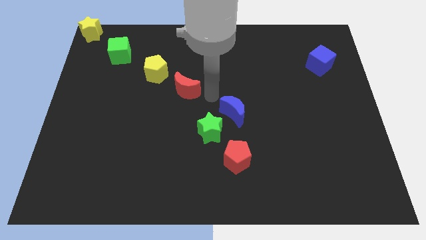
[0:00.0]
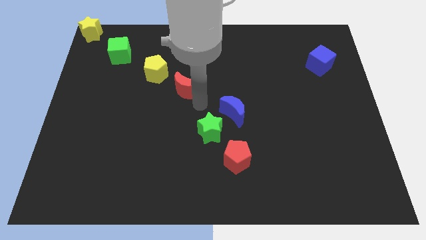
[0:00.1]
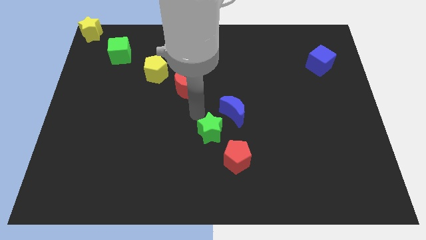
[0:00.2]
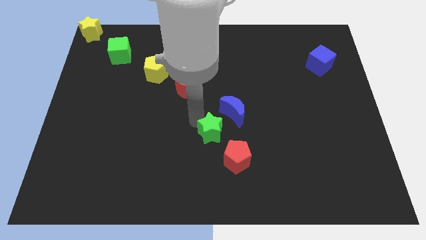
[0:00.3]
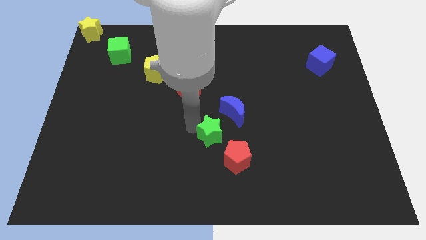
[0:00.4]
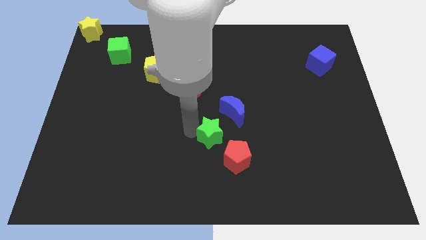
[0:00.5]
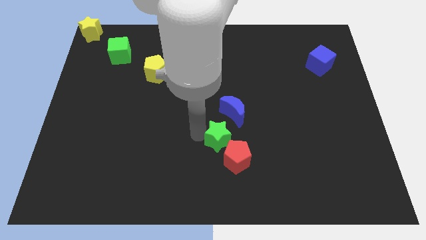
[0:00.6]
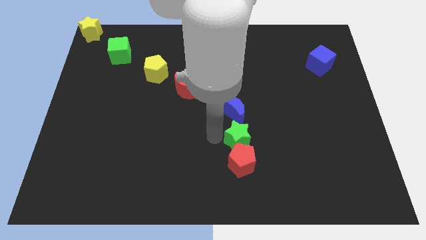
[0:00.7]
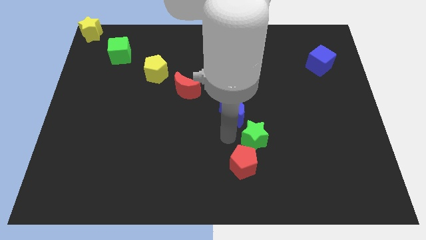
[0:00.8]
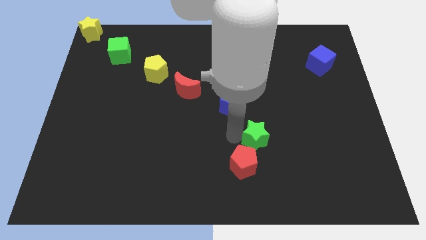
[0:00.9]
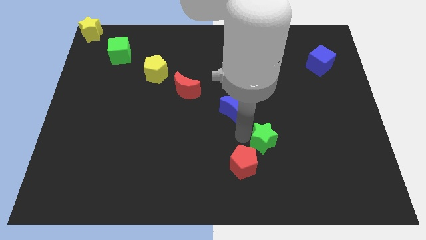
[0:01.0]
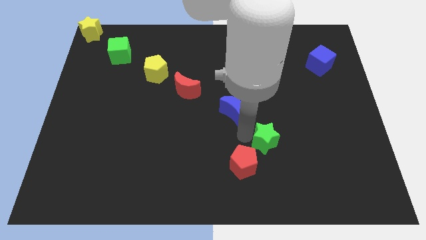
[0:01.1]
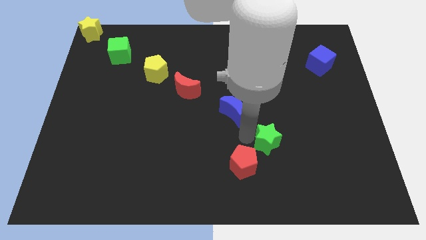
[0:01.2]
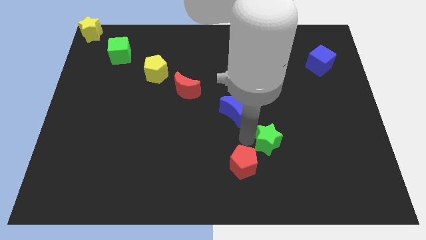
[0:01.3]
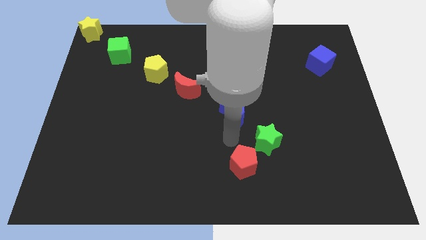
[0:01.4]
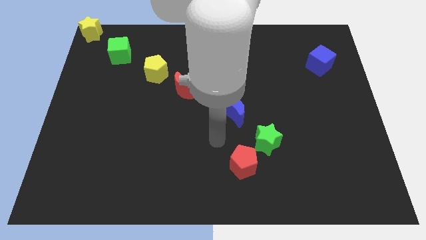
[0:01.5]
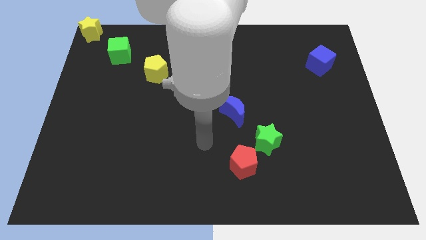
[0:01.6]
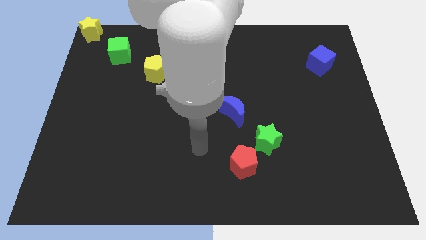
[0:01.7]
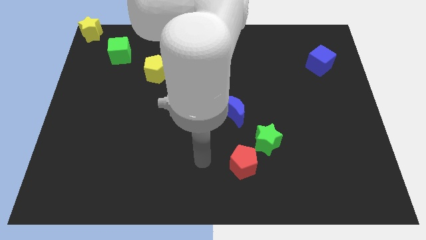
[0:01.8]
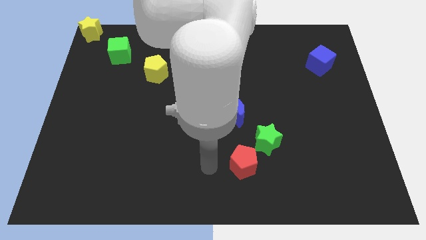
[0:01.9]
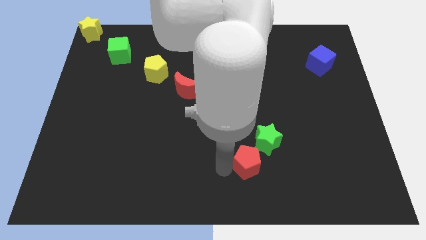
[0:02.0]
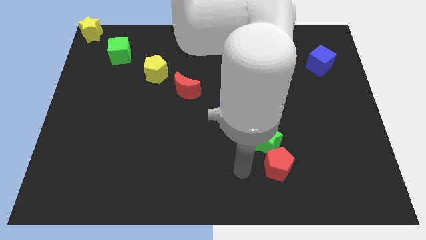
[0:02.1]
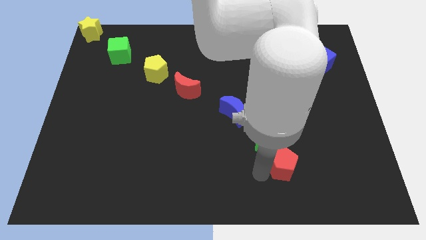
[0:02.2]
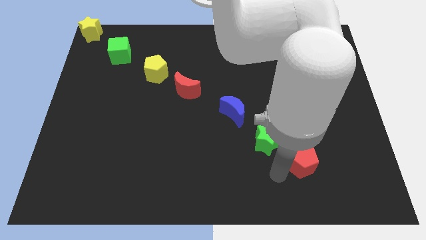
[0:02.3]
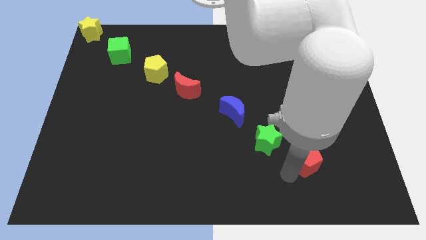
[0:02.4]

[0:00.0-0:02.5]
move the green star and the red pentagon to the right

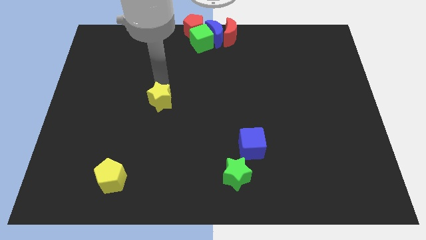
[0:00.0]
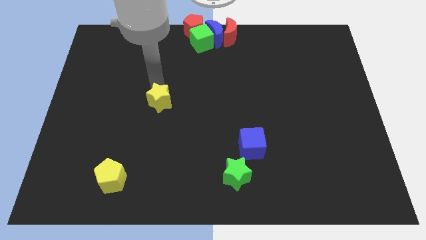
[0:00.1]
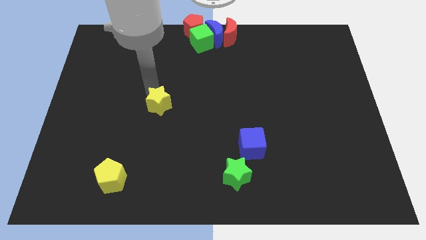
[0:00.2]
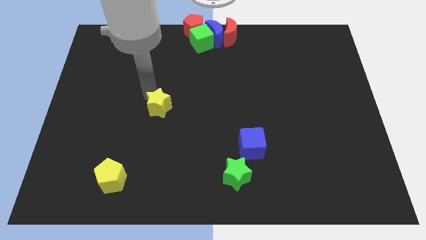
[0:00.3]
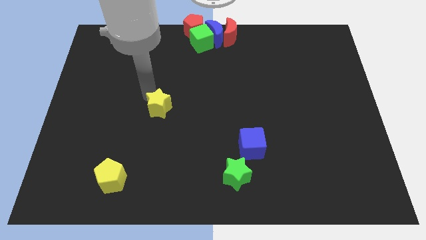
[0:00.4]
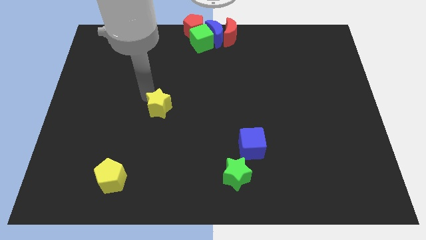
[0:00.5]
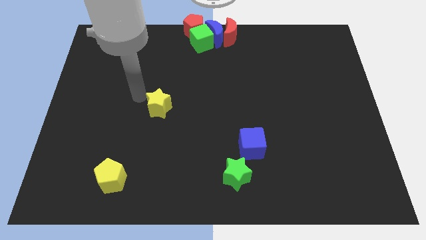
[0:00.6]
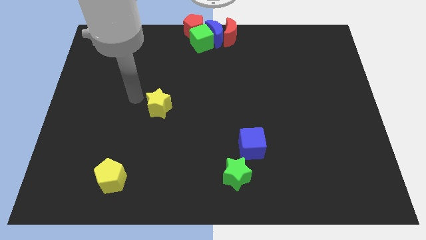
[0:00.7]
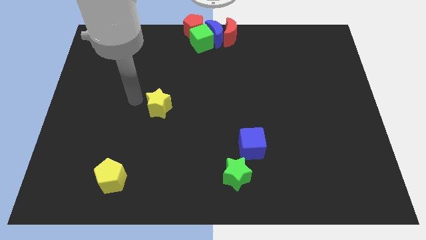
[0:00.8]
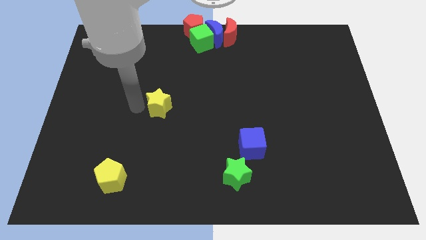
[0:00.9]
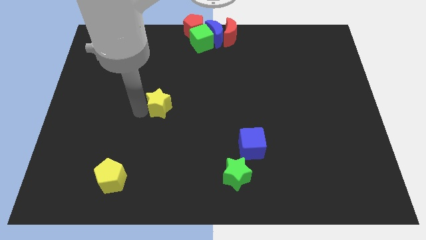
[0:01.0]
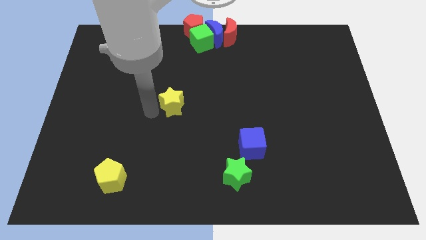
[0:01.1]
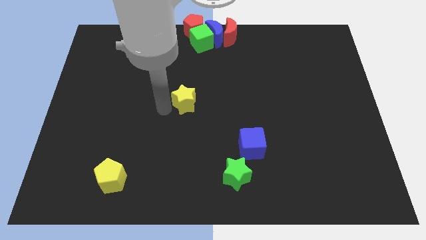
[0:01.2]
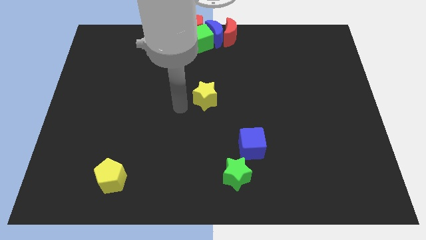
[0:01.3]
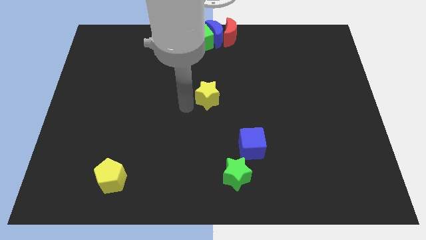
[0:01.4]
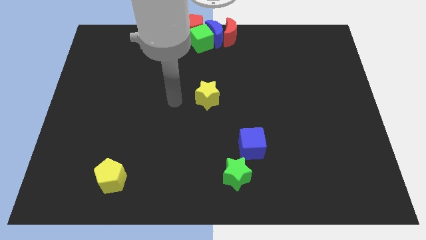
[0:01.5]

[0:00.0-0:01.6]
slide the yellow star to the centre of the board

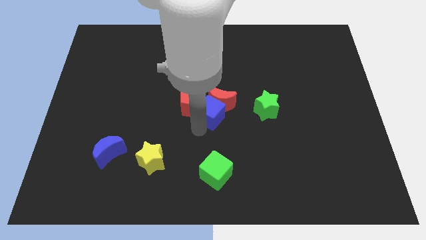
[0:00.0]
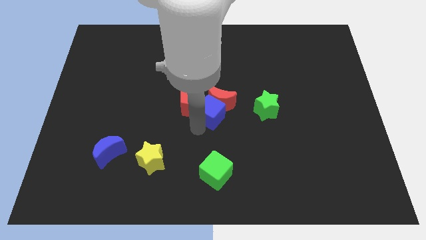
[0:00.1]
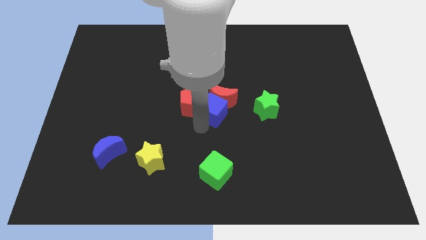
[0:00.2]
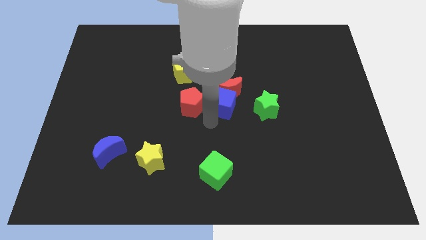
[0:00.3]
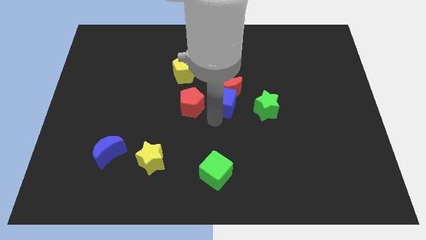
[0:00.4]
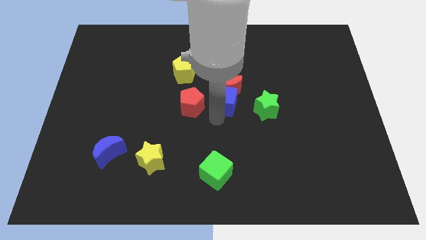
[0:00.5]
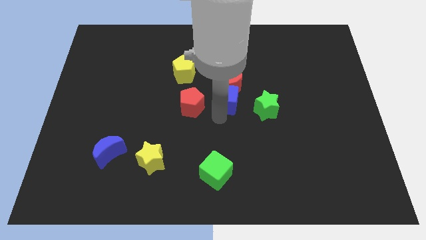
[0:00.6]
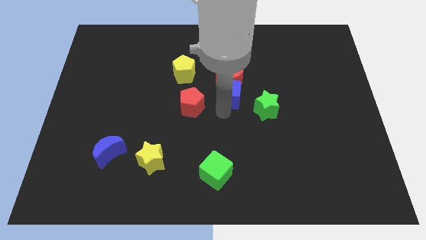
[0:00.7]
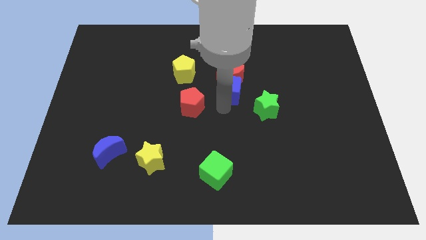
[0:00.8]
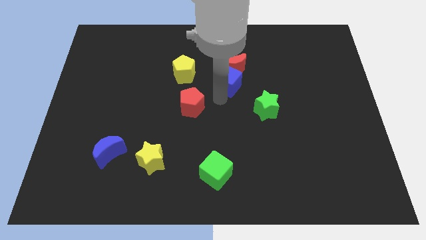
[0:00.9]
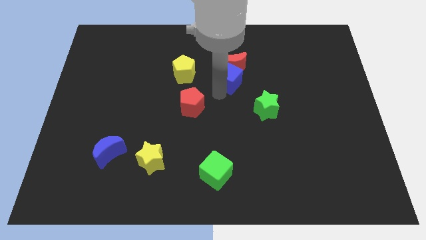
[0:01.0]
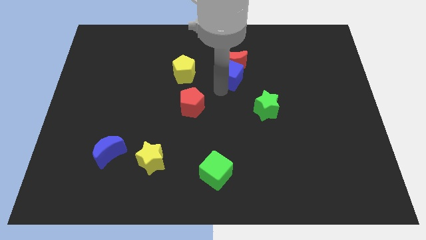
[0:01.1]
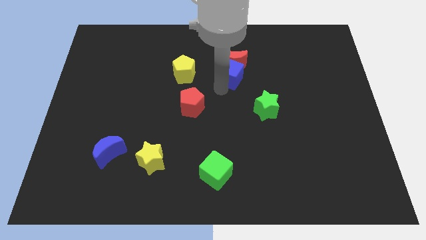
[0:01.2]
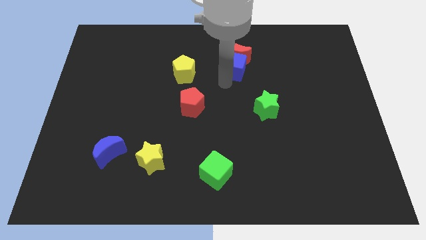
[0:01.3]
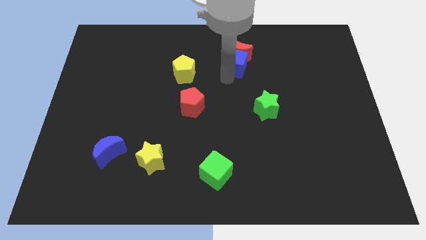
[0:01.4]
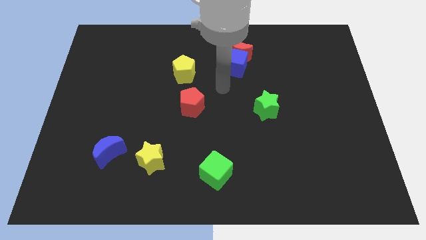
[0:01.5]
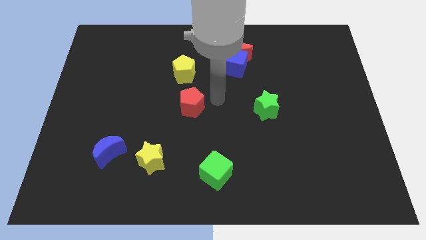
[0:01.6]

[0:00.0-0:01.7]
drag the blue cube and red crescent together to the top side of the board

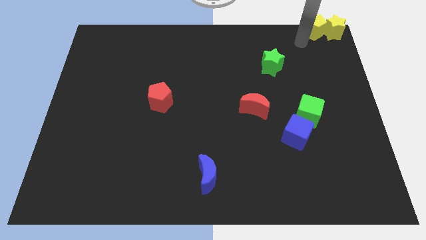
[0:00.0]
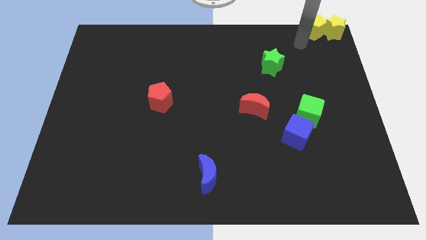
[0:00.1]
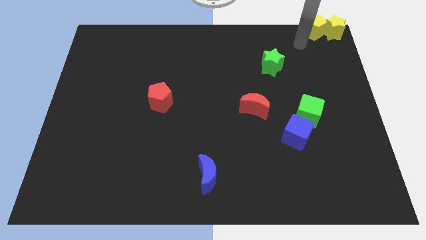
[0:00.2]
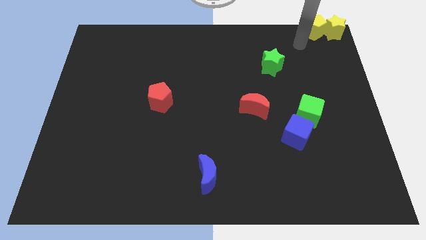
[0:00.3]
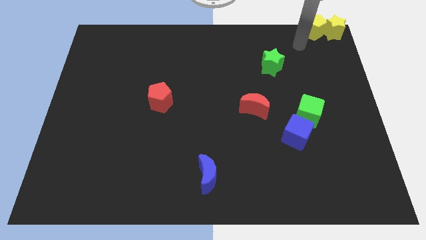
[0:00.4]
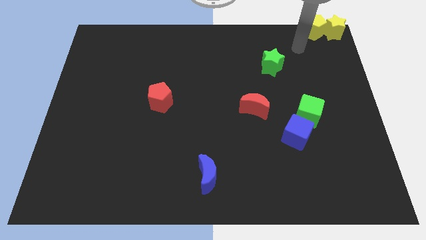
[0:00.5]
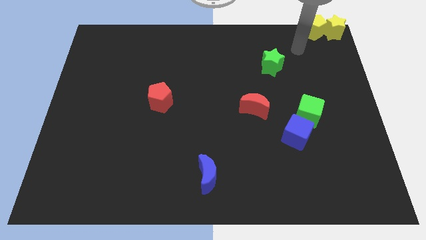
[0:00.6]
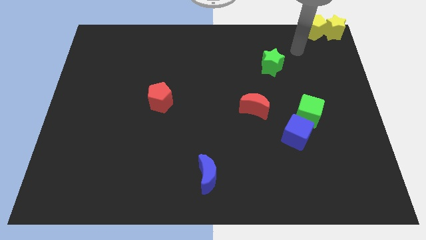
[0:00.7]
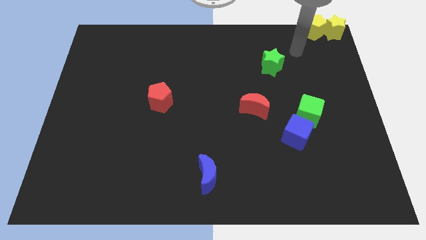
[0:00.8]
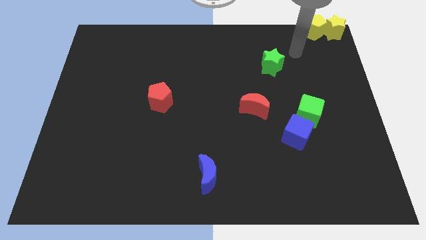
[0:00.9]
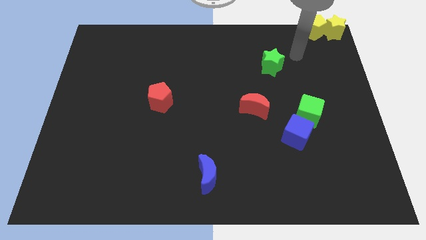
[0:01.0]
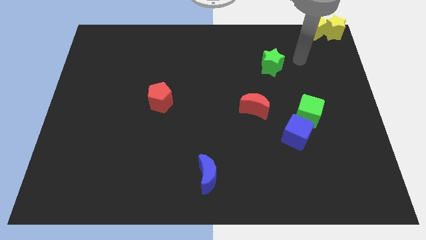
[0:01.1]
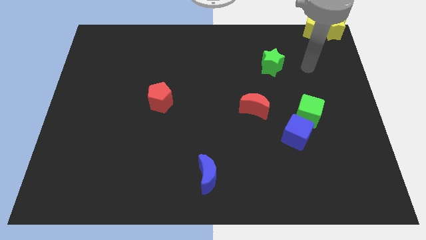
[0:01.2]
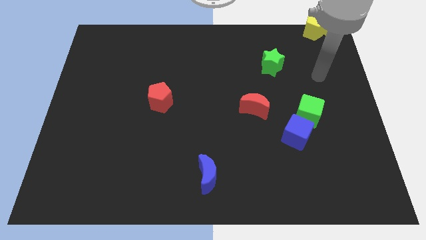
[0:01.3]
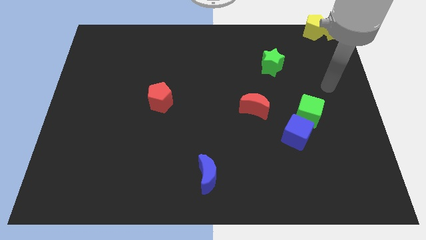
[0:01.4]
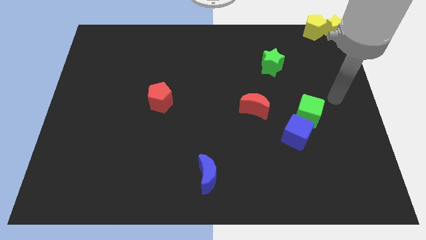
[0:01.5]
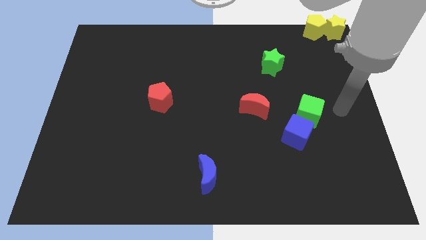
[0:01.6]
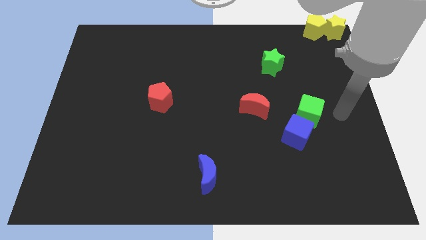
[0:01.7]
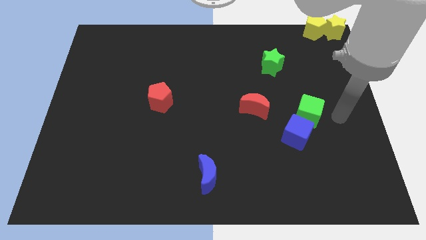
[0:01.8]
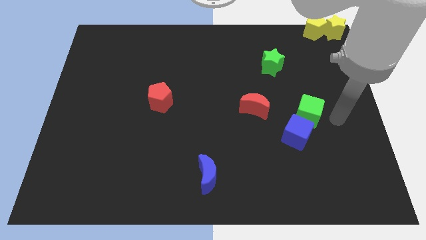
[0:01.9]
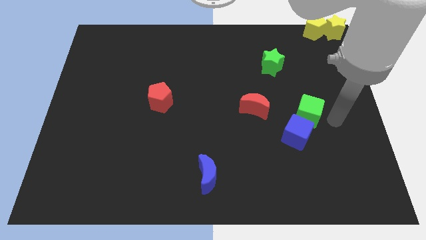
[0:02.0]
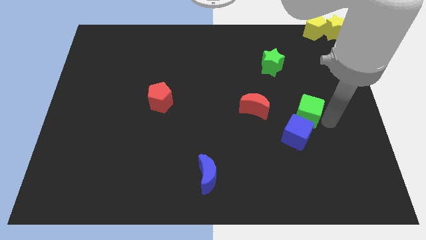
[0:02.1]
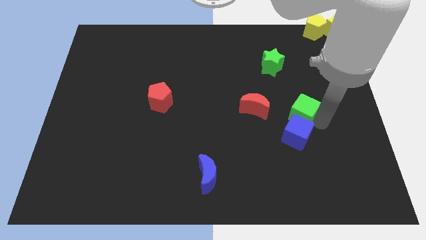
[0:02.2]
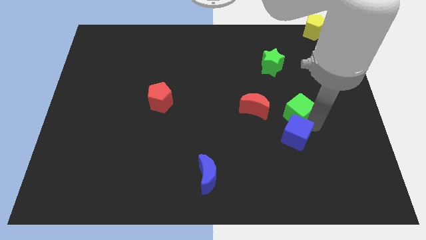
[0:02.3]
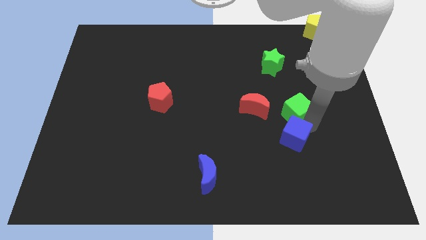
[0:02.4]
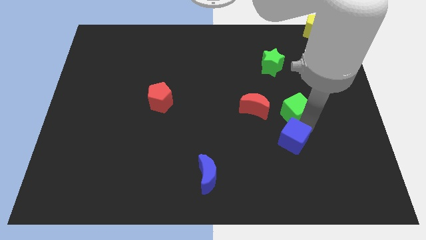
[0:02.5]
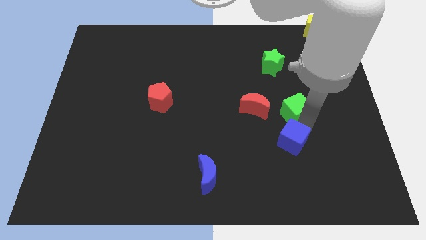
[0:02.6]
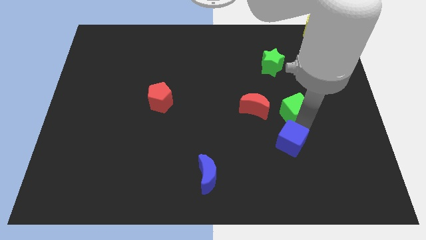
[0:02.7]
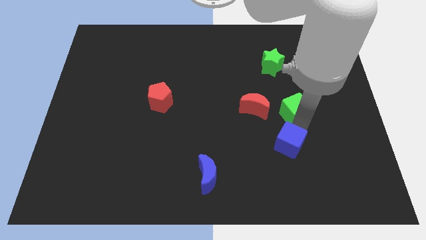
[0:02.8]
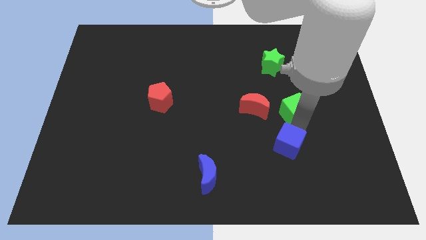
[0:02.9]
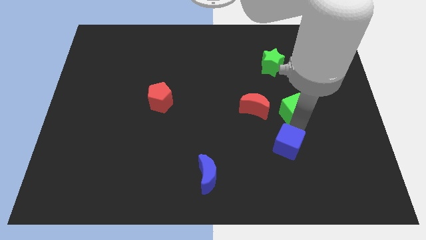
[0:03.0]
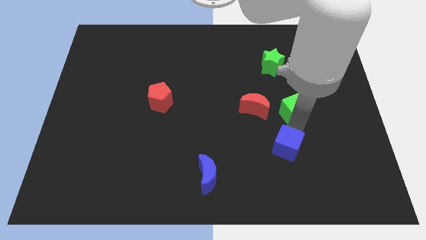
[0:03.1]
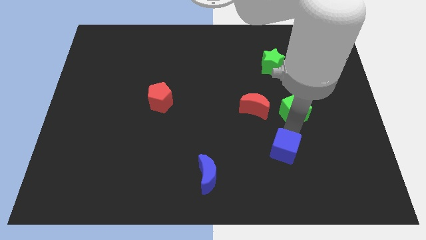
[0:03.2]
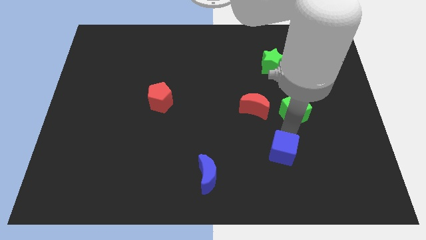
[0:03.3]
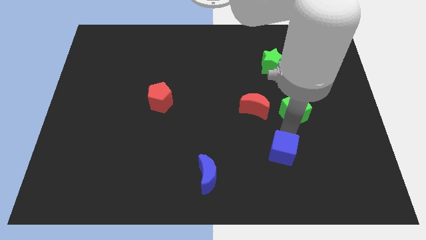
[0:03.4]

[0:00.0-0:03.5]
separate green cube and blue cube
